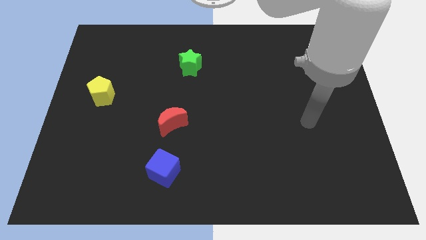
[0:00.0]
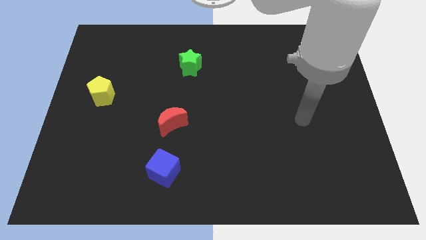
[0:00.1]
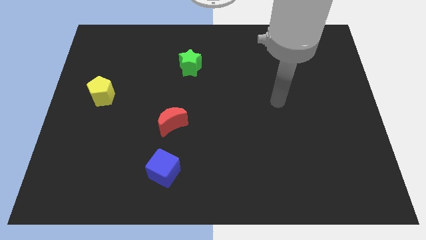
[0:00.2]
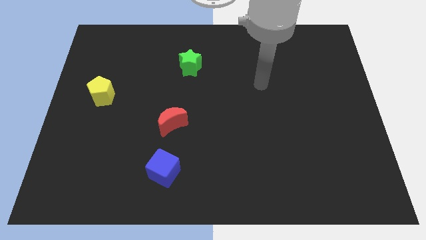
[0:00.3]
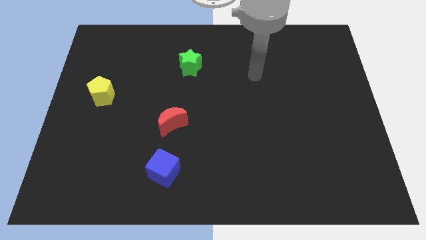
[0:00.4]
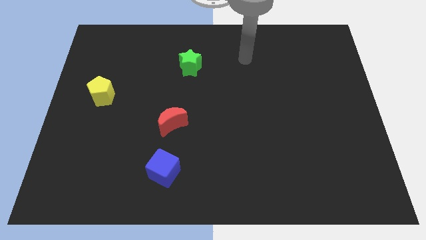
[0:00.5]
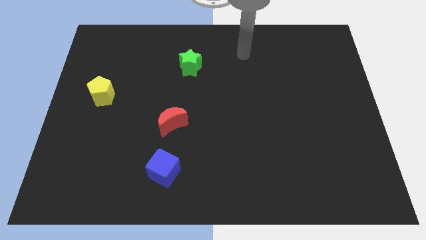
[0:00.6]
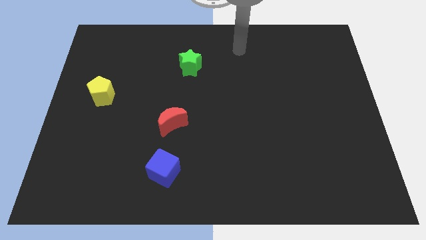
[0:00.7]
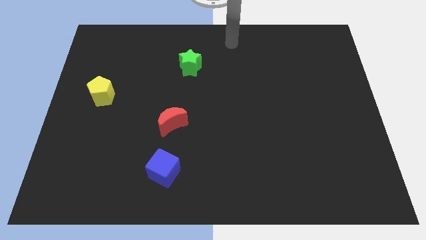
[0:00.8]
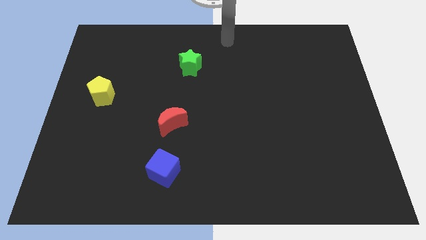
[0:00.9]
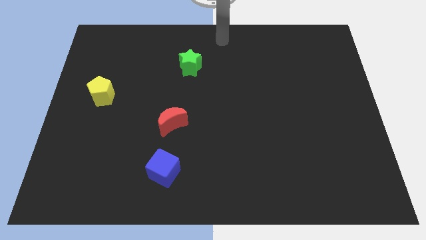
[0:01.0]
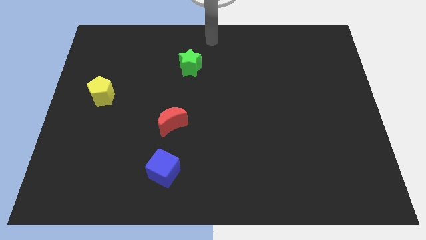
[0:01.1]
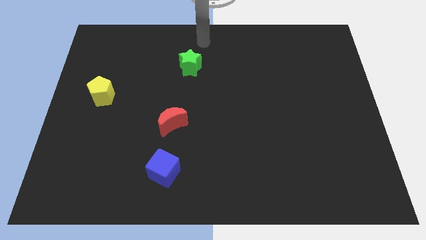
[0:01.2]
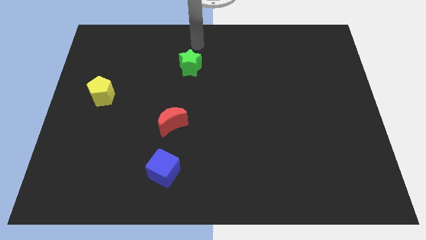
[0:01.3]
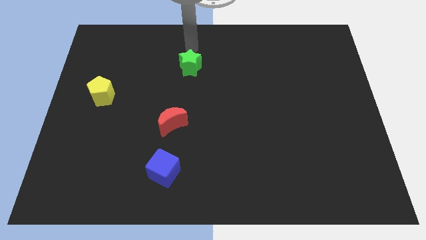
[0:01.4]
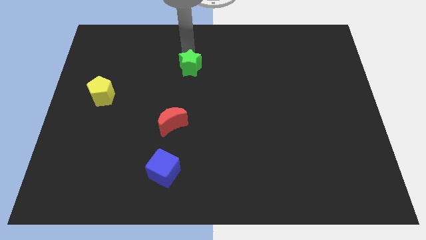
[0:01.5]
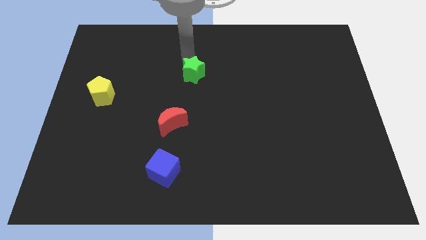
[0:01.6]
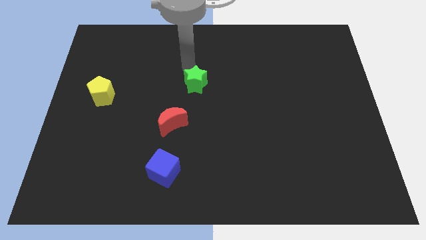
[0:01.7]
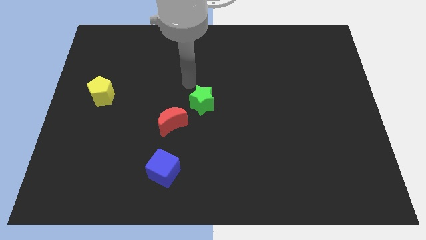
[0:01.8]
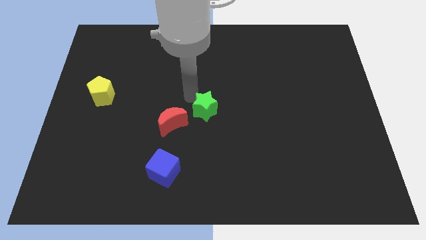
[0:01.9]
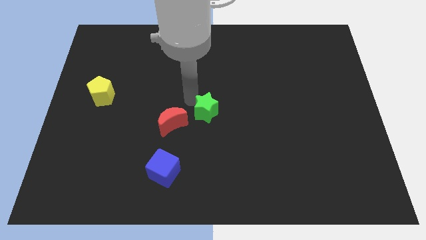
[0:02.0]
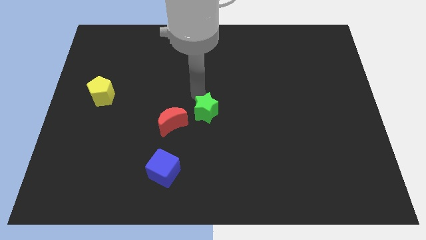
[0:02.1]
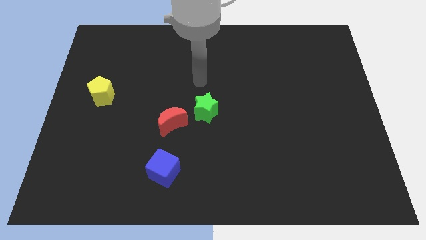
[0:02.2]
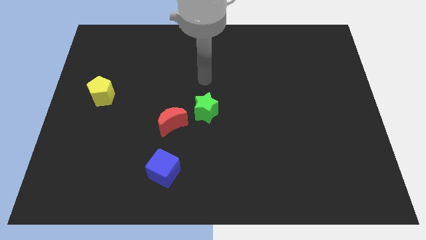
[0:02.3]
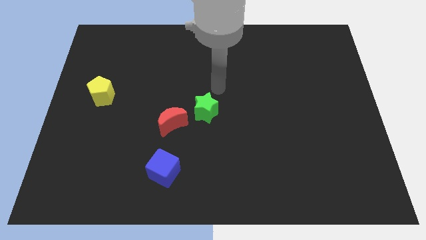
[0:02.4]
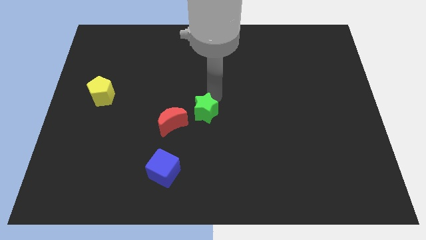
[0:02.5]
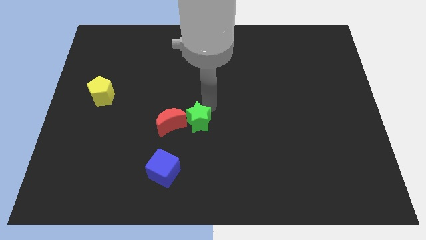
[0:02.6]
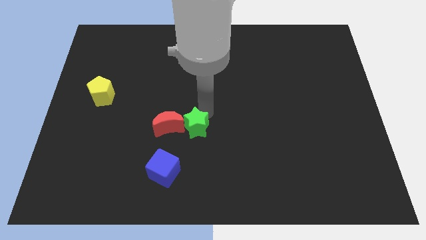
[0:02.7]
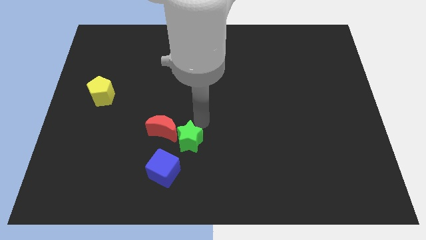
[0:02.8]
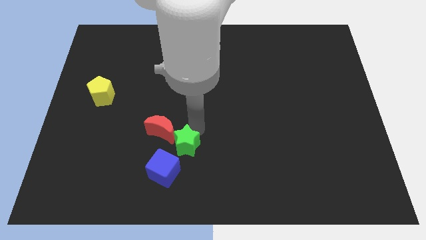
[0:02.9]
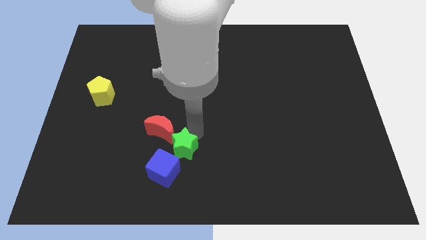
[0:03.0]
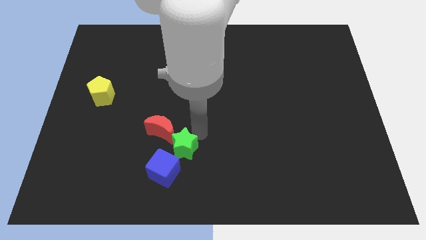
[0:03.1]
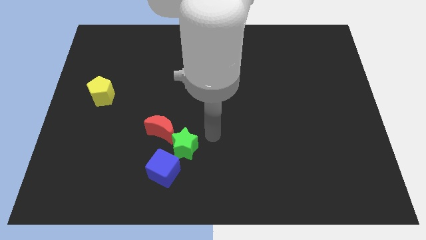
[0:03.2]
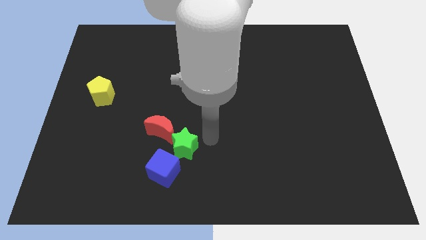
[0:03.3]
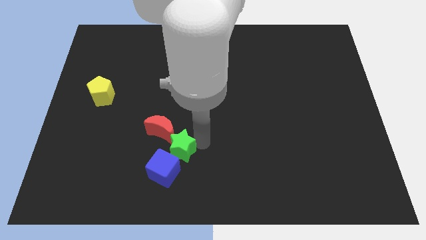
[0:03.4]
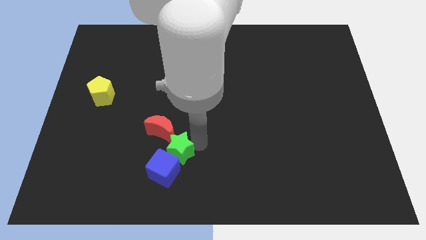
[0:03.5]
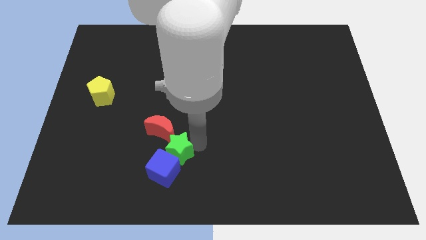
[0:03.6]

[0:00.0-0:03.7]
push the green star close to the cube

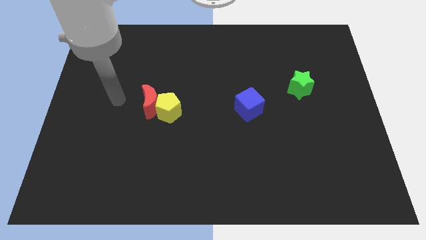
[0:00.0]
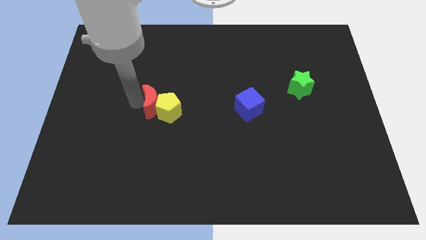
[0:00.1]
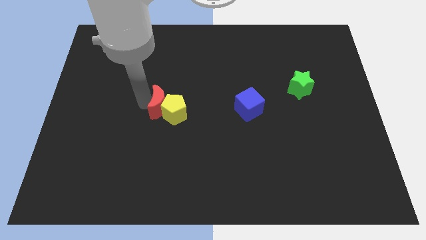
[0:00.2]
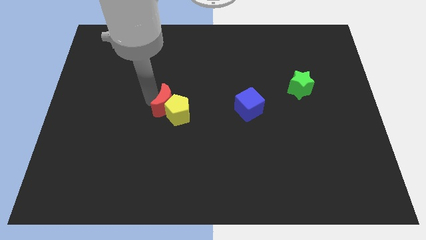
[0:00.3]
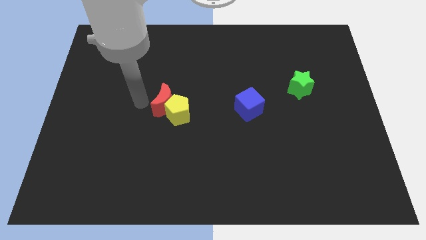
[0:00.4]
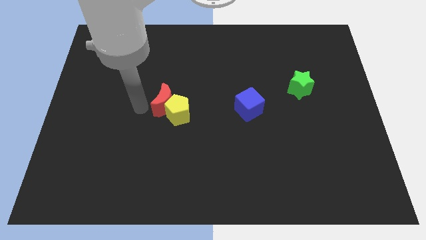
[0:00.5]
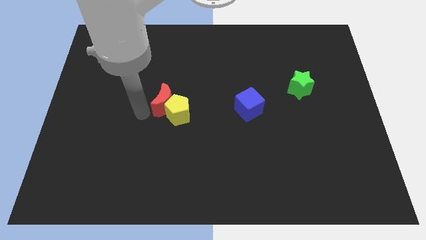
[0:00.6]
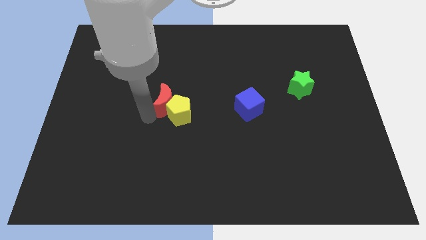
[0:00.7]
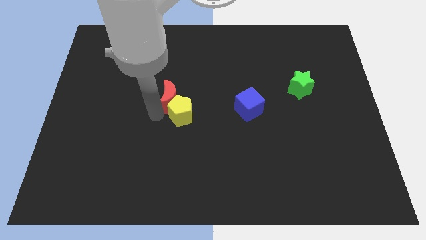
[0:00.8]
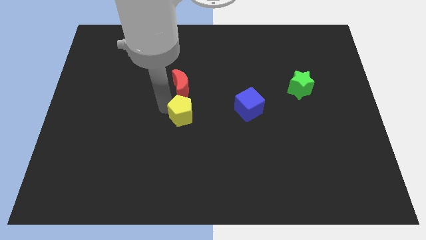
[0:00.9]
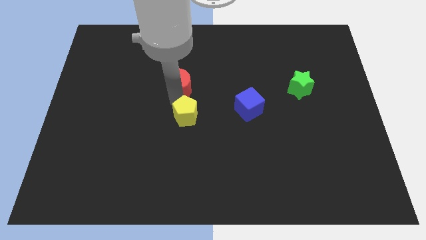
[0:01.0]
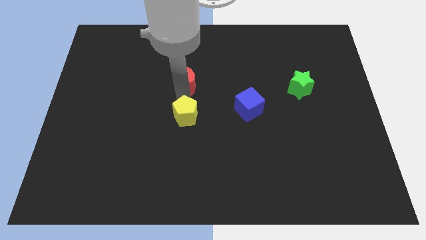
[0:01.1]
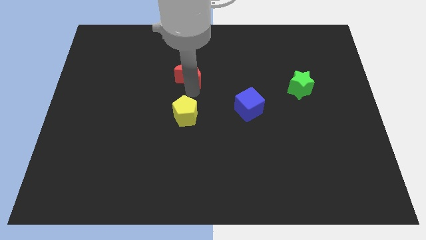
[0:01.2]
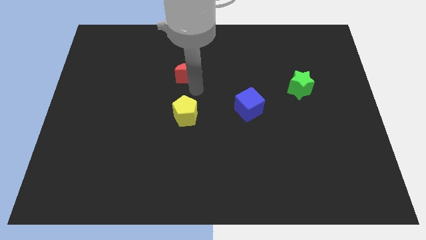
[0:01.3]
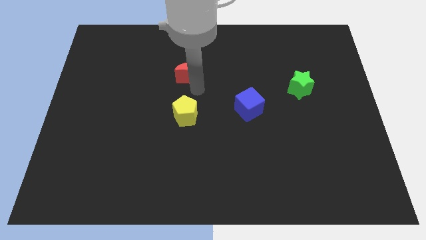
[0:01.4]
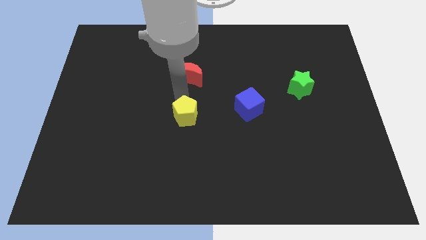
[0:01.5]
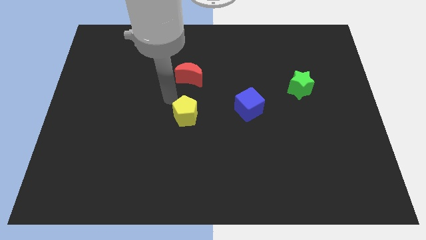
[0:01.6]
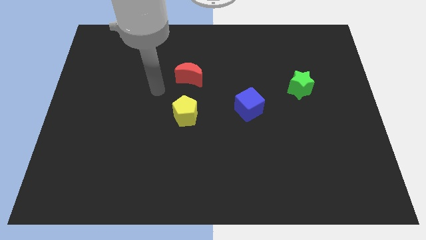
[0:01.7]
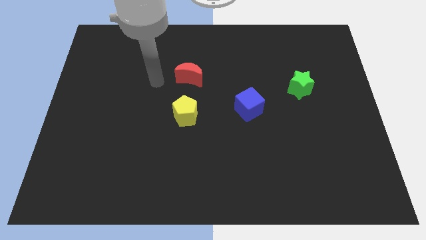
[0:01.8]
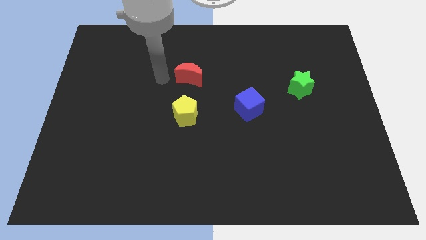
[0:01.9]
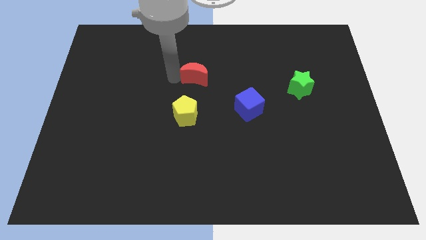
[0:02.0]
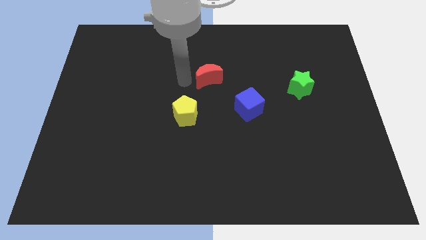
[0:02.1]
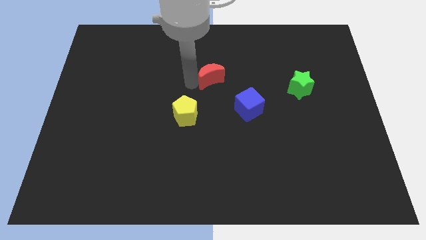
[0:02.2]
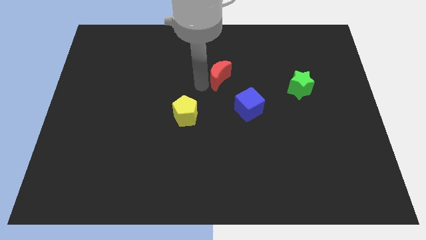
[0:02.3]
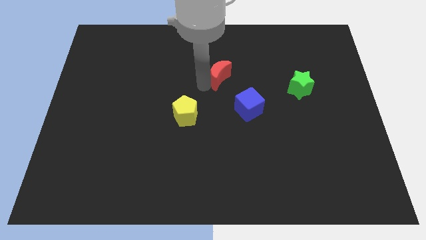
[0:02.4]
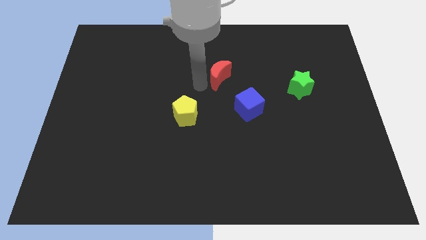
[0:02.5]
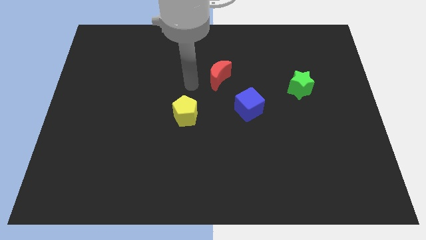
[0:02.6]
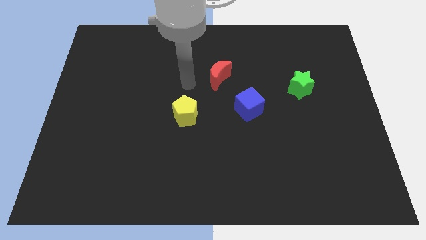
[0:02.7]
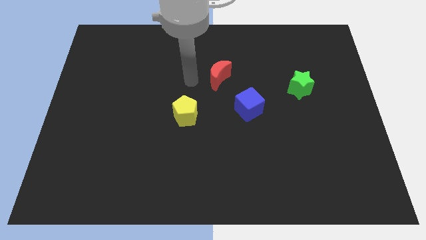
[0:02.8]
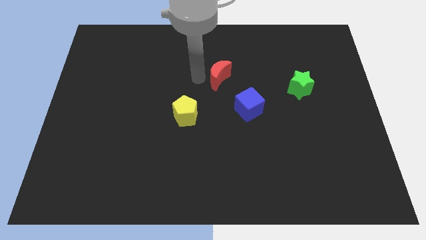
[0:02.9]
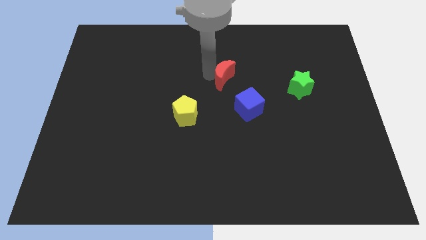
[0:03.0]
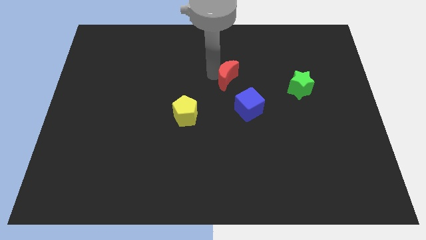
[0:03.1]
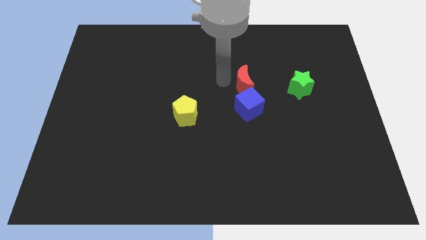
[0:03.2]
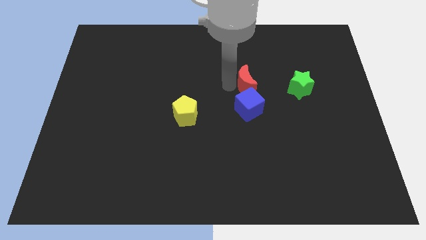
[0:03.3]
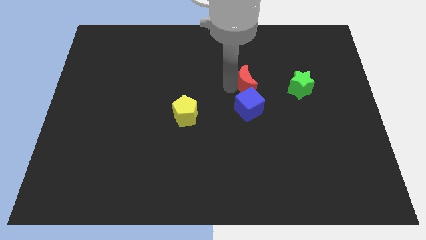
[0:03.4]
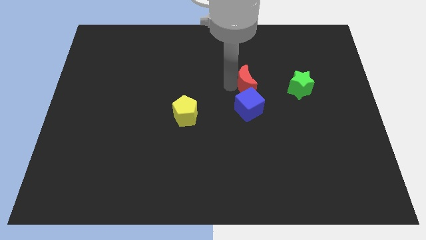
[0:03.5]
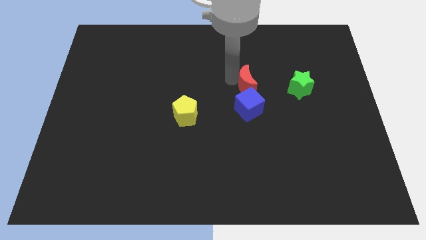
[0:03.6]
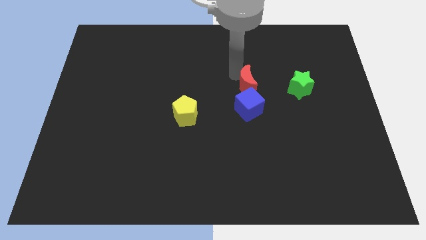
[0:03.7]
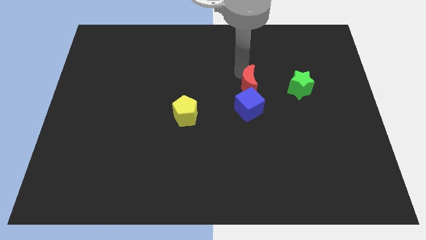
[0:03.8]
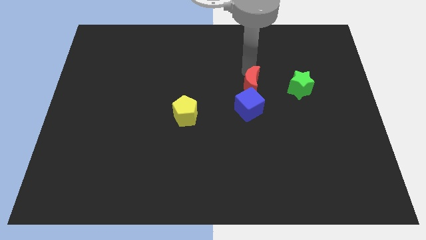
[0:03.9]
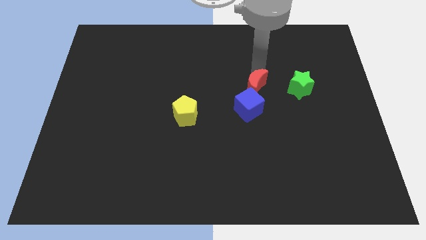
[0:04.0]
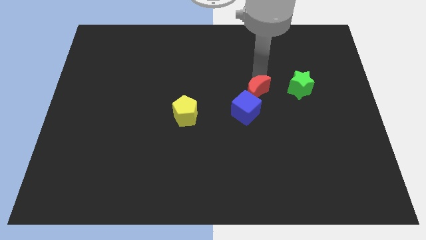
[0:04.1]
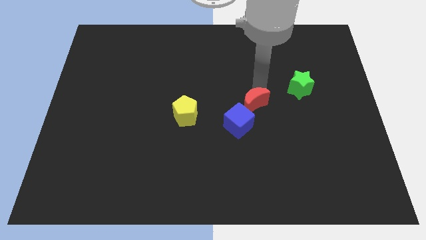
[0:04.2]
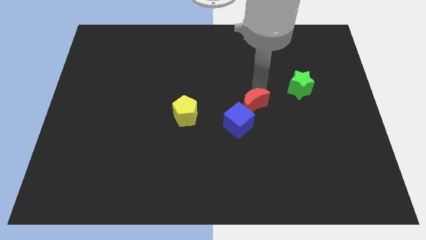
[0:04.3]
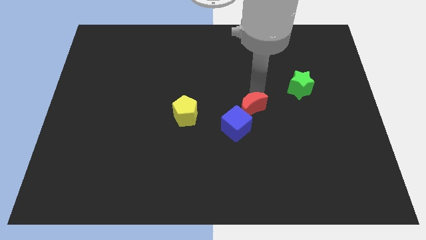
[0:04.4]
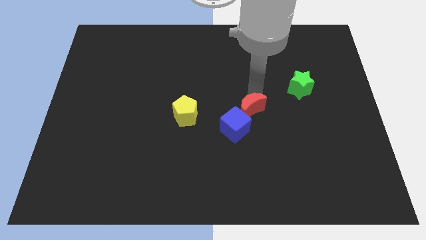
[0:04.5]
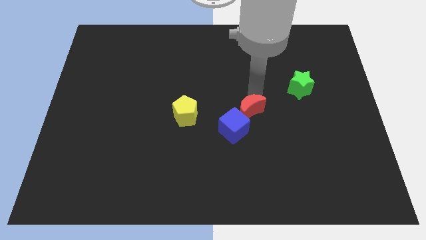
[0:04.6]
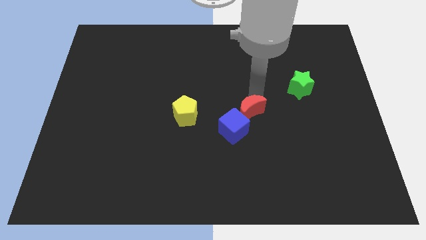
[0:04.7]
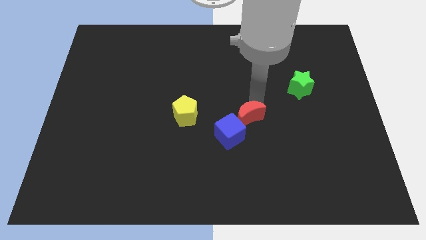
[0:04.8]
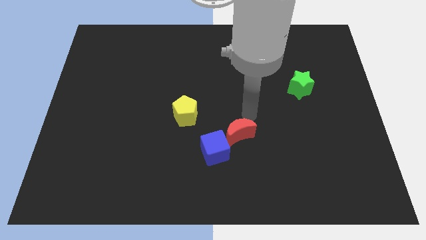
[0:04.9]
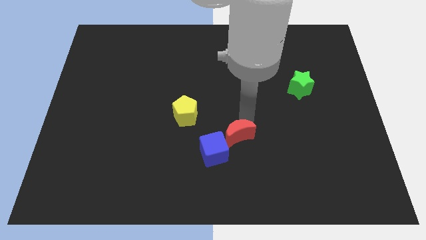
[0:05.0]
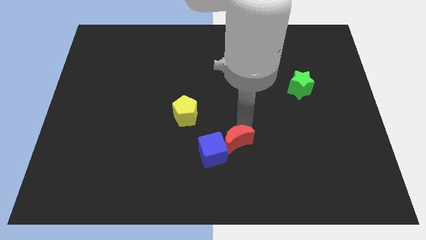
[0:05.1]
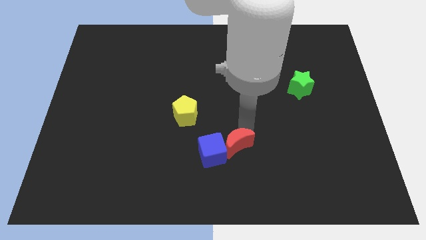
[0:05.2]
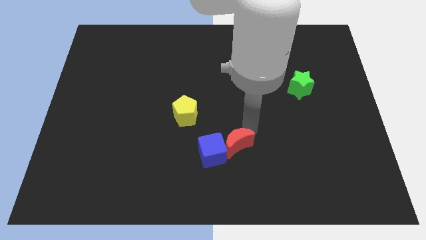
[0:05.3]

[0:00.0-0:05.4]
push the red block close to the blue cube
